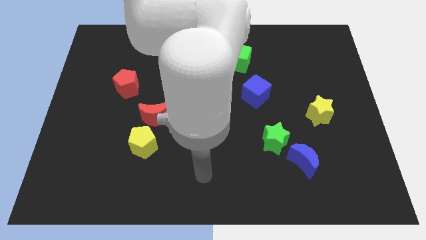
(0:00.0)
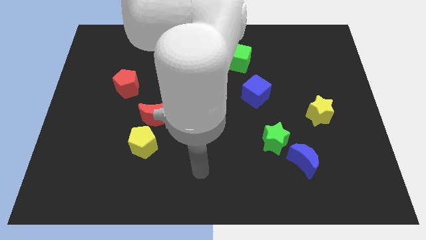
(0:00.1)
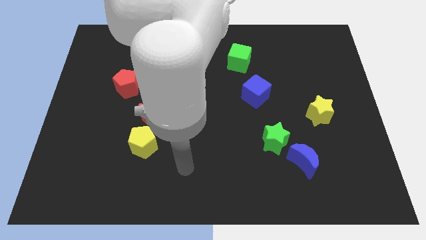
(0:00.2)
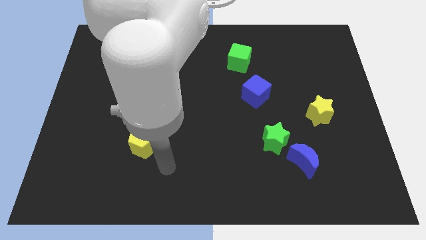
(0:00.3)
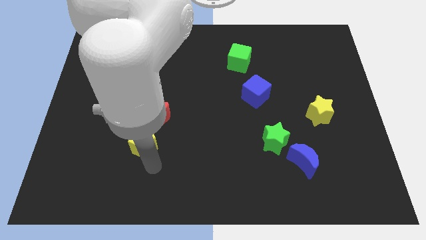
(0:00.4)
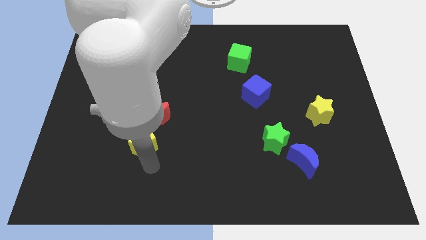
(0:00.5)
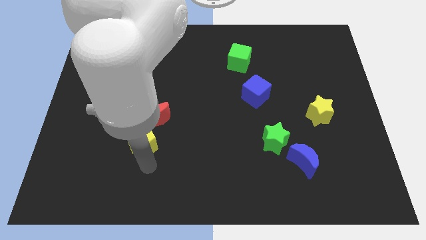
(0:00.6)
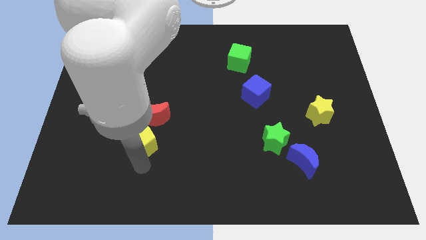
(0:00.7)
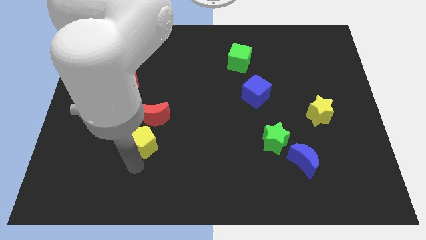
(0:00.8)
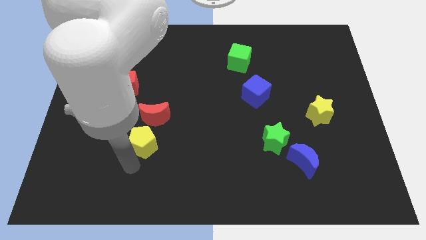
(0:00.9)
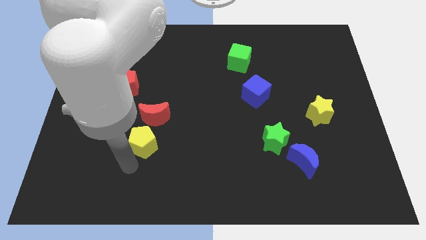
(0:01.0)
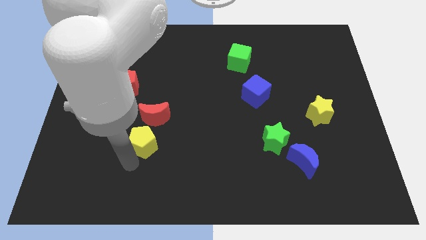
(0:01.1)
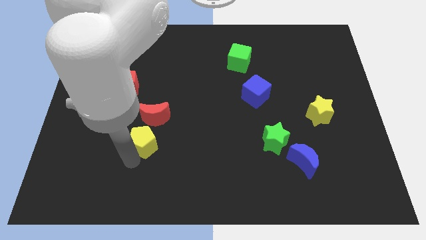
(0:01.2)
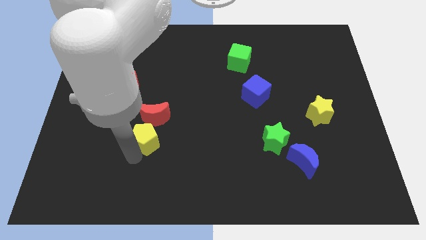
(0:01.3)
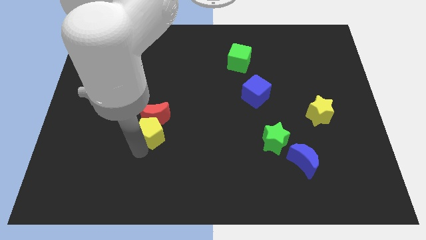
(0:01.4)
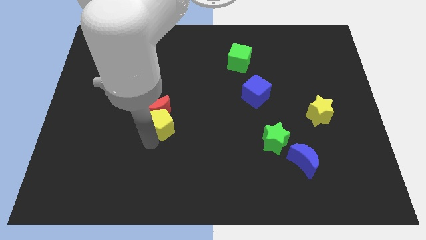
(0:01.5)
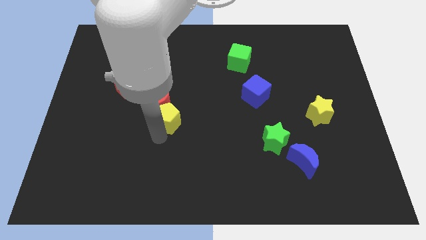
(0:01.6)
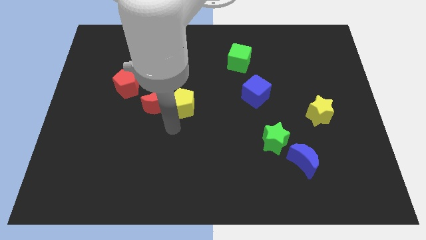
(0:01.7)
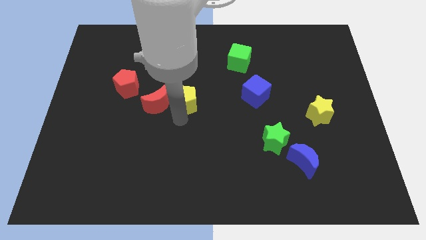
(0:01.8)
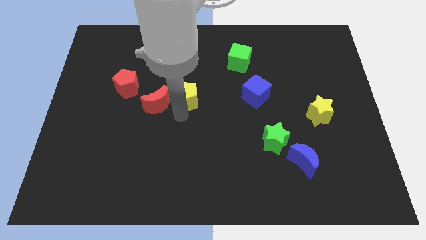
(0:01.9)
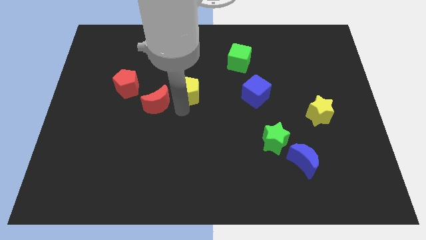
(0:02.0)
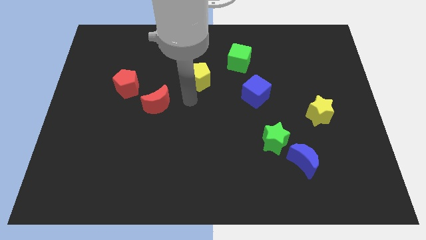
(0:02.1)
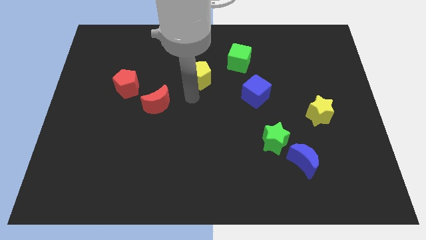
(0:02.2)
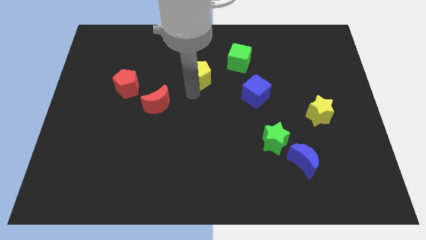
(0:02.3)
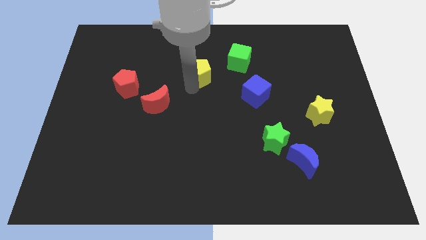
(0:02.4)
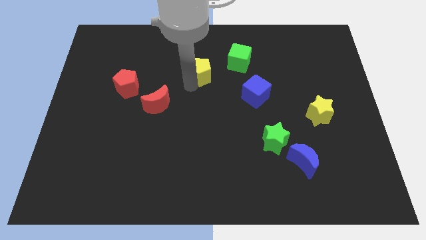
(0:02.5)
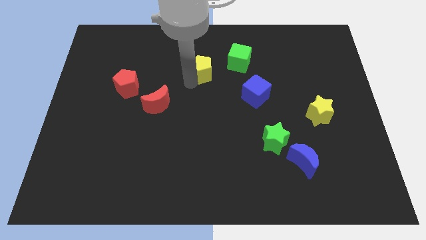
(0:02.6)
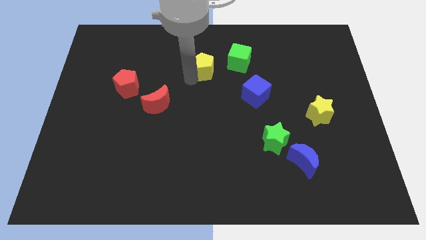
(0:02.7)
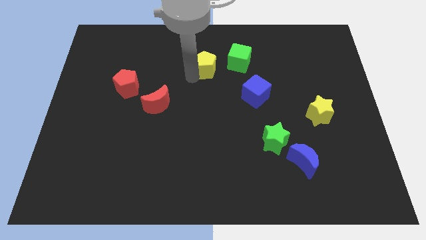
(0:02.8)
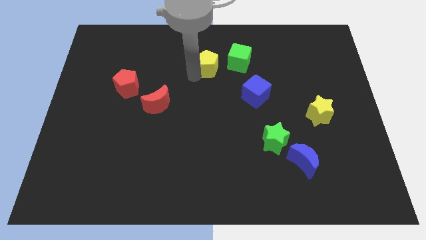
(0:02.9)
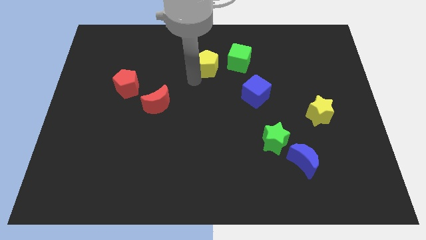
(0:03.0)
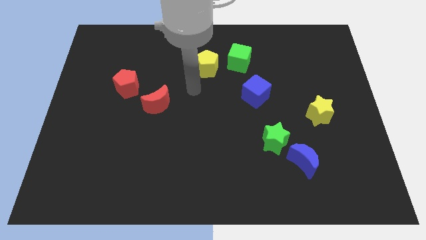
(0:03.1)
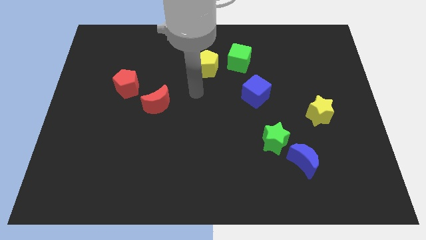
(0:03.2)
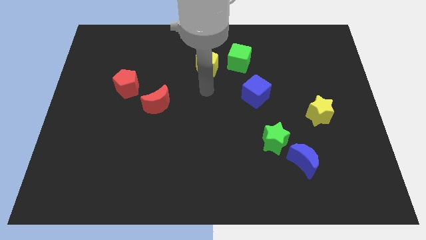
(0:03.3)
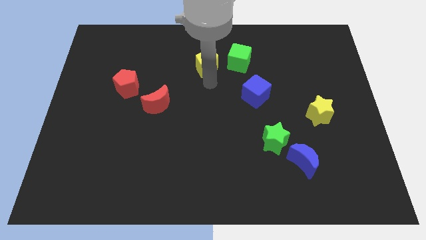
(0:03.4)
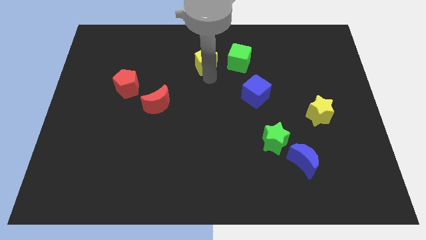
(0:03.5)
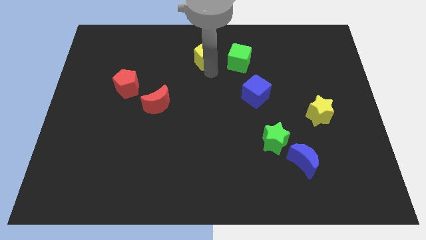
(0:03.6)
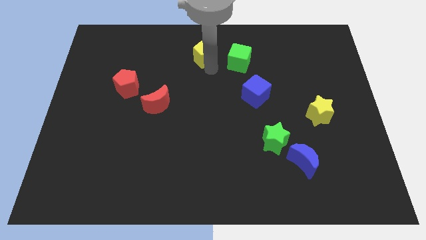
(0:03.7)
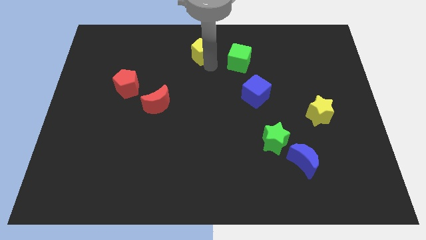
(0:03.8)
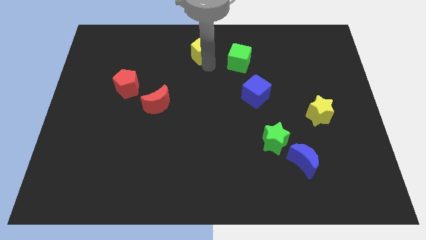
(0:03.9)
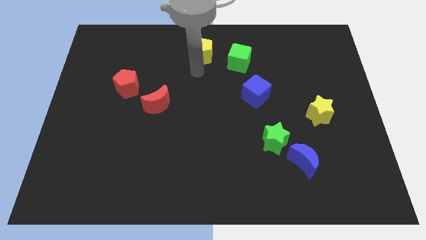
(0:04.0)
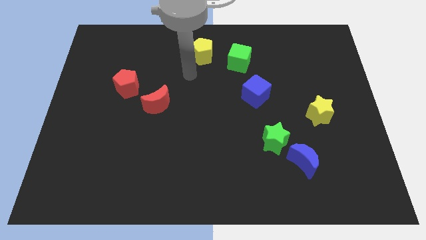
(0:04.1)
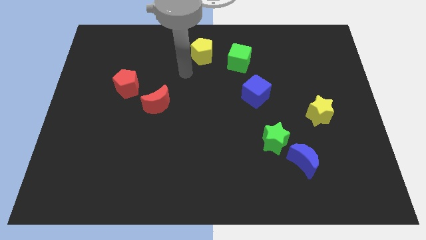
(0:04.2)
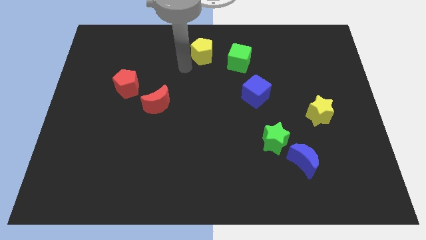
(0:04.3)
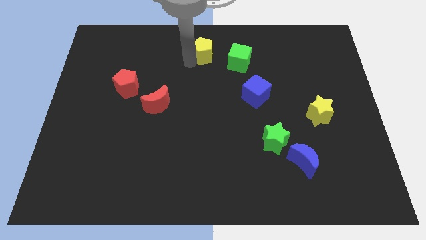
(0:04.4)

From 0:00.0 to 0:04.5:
move the yellow penatgon to the left of the green cube

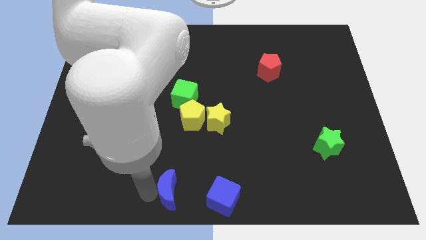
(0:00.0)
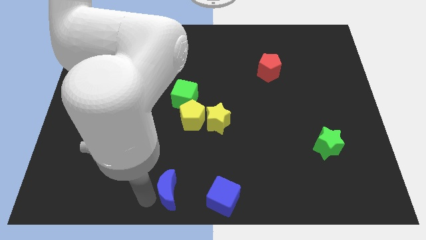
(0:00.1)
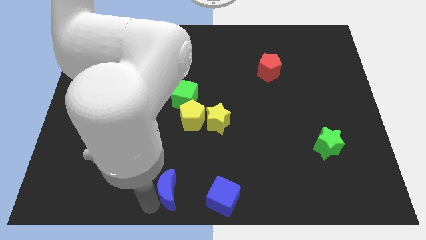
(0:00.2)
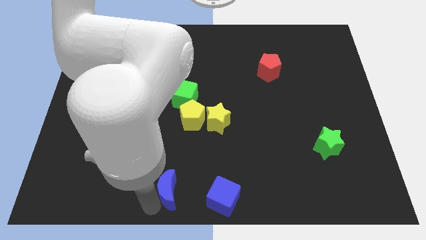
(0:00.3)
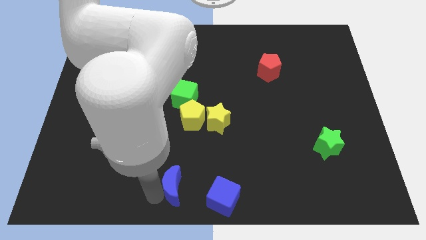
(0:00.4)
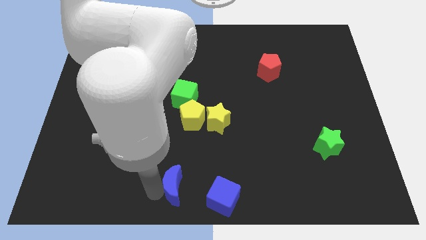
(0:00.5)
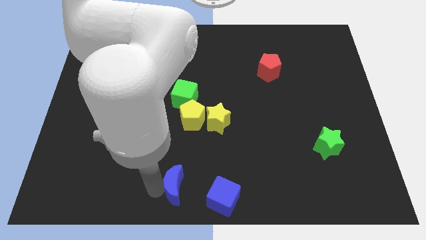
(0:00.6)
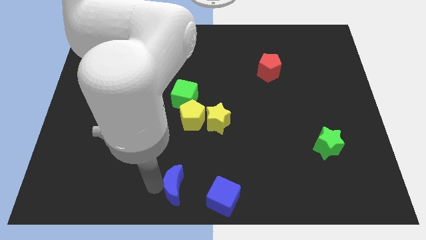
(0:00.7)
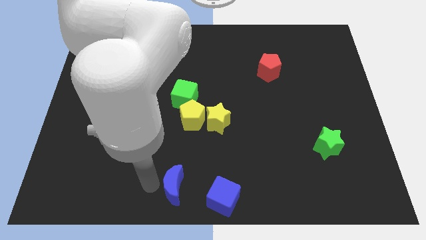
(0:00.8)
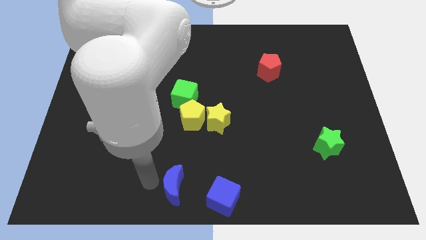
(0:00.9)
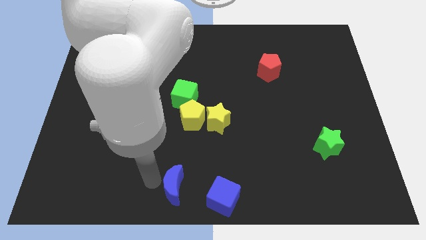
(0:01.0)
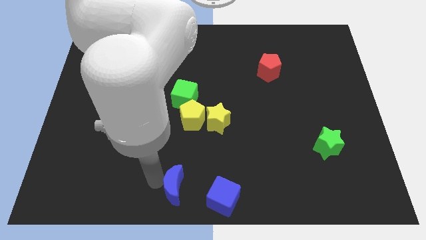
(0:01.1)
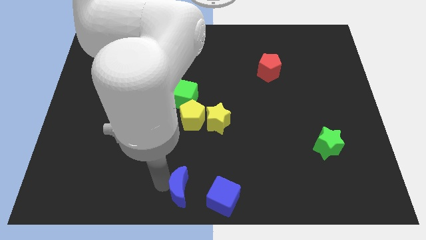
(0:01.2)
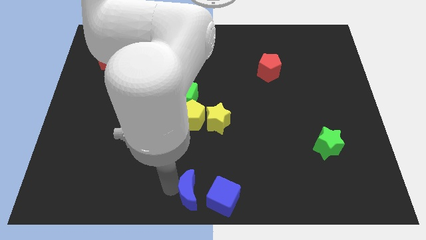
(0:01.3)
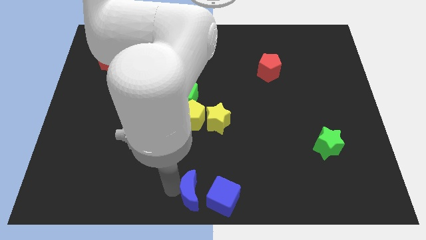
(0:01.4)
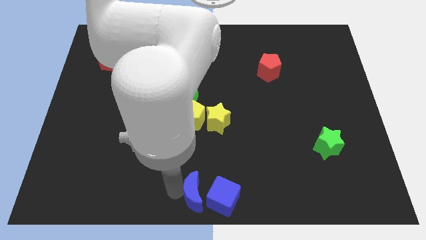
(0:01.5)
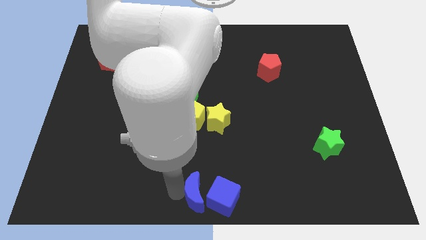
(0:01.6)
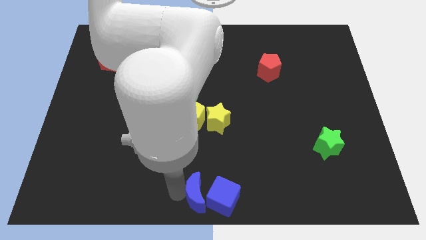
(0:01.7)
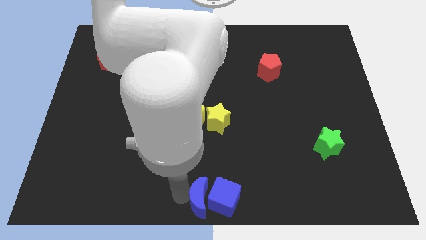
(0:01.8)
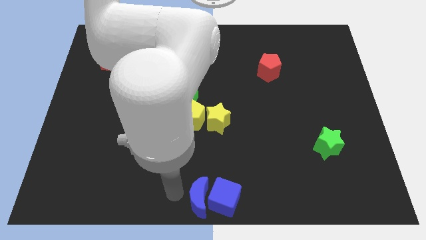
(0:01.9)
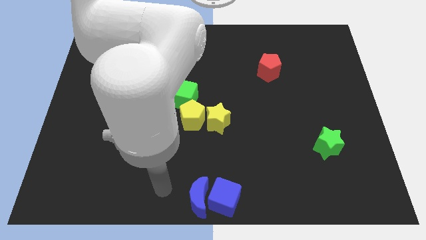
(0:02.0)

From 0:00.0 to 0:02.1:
move the blue crescent to the left of the blue cube

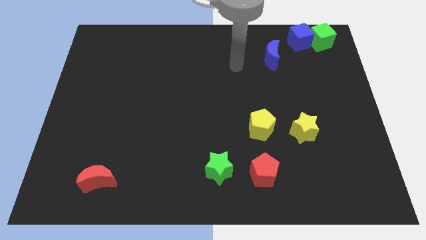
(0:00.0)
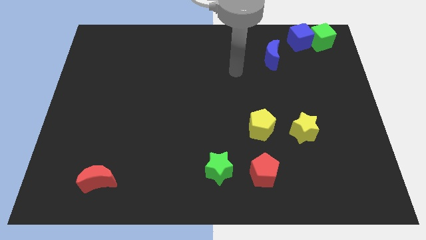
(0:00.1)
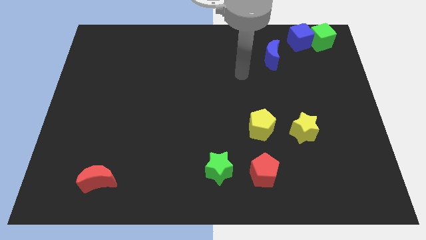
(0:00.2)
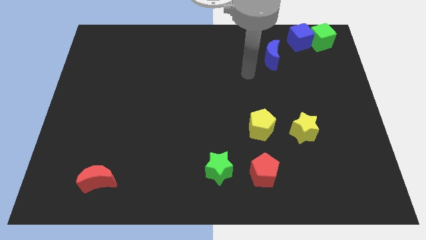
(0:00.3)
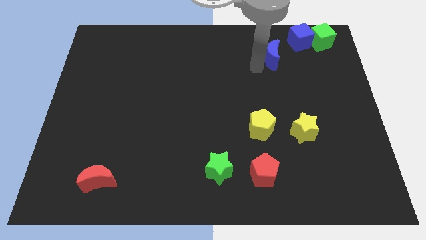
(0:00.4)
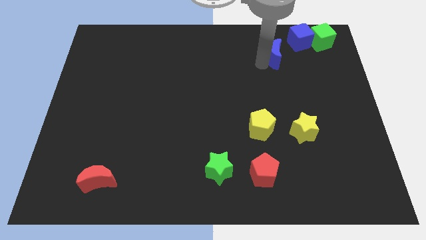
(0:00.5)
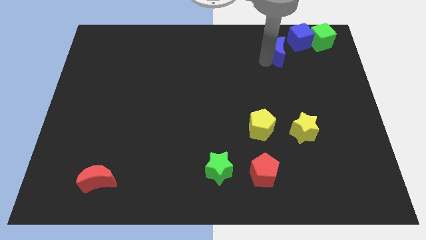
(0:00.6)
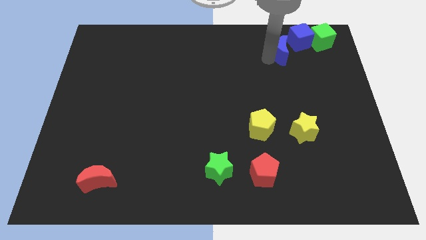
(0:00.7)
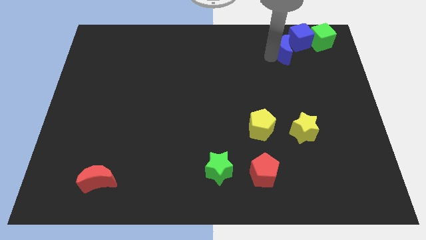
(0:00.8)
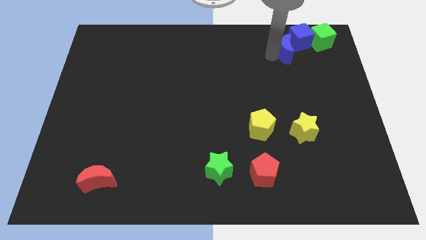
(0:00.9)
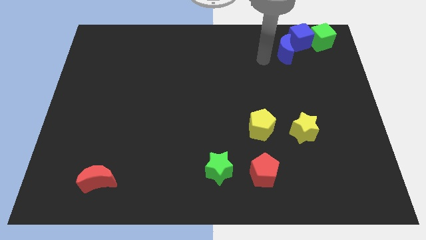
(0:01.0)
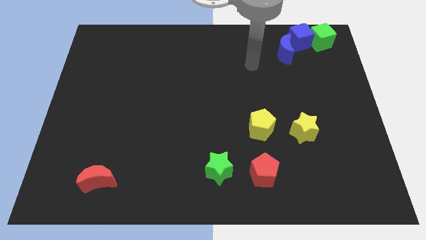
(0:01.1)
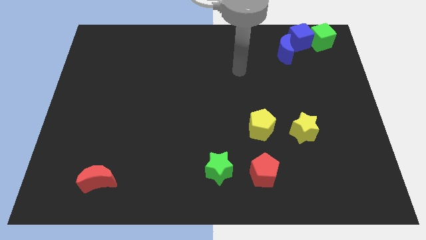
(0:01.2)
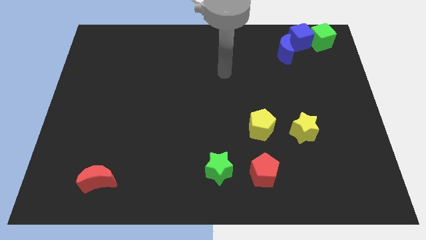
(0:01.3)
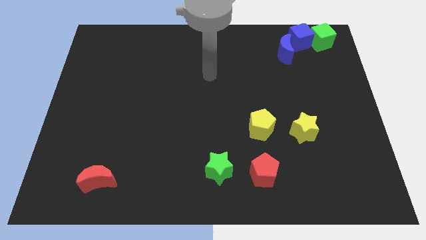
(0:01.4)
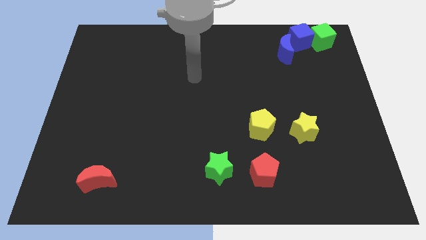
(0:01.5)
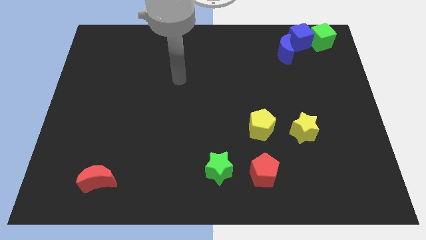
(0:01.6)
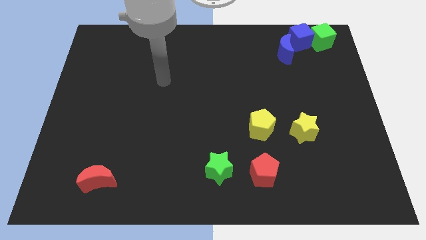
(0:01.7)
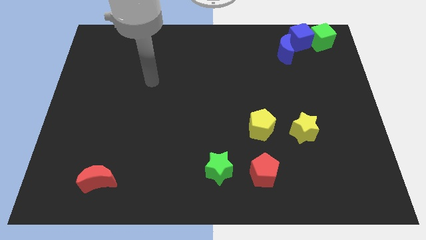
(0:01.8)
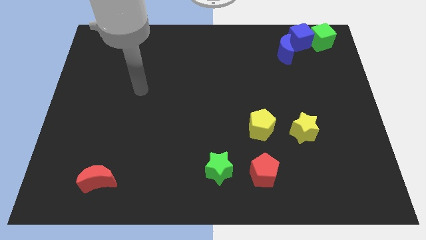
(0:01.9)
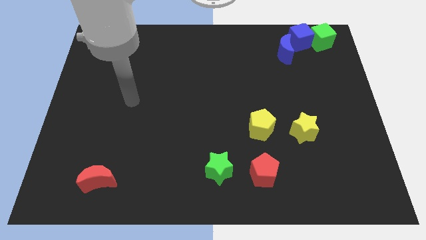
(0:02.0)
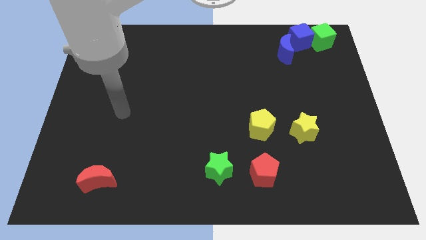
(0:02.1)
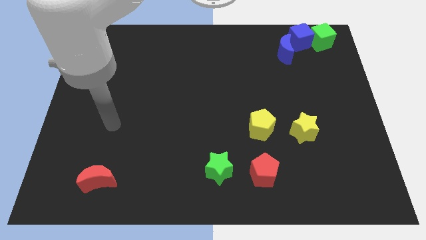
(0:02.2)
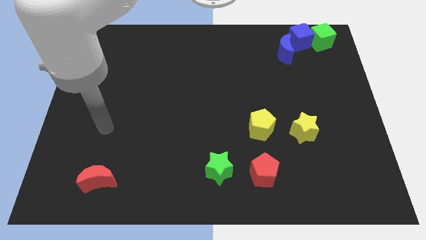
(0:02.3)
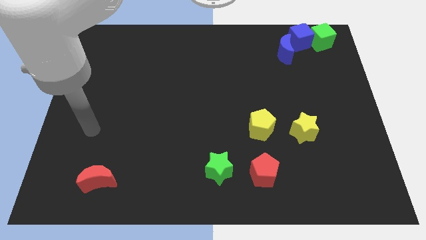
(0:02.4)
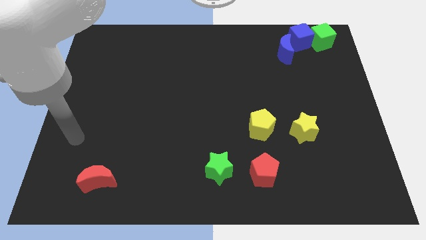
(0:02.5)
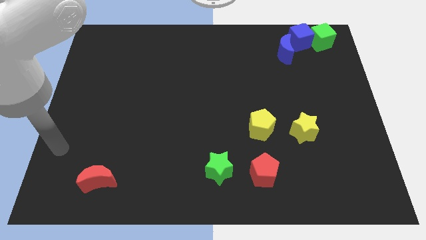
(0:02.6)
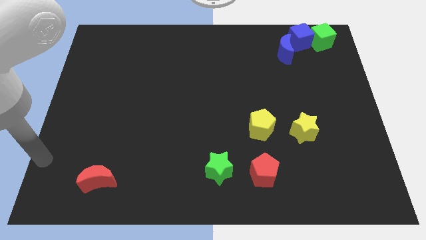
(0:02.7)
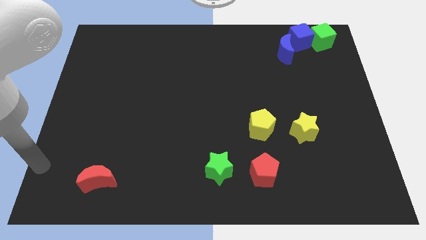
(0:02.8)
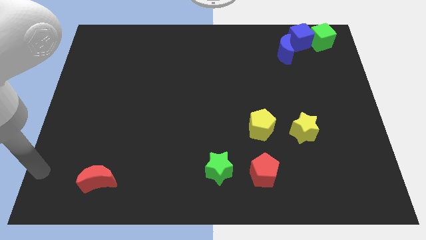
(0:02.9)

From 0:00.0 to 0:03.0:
move the blue moon close to the blue cube
